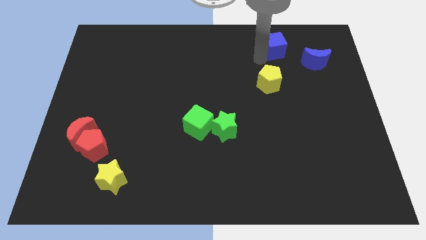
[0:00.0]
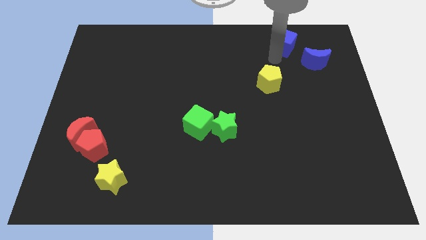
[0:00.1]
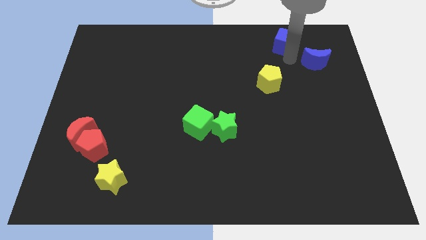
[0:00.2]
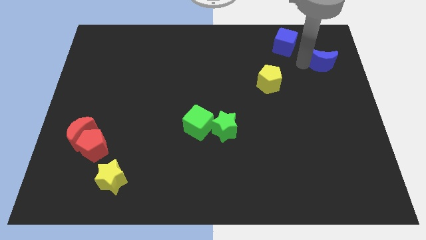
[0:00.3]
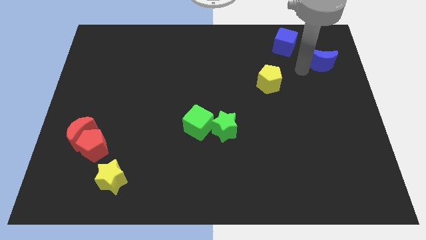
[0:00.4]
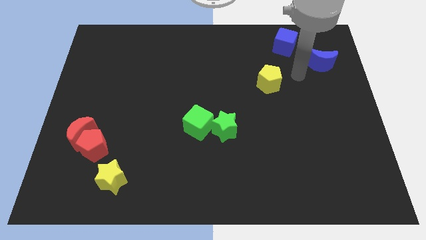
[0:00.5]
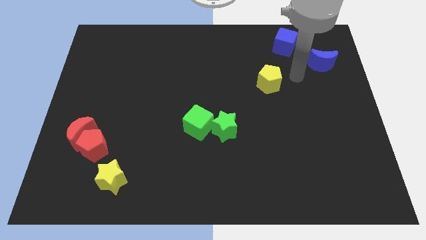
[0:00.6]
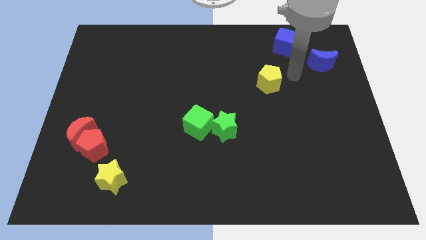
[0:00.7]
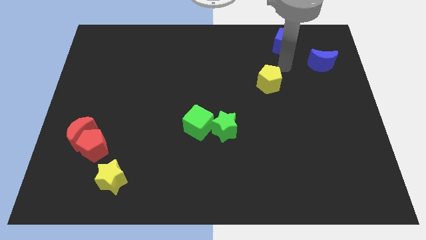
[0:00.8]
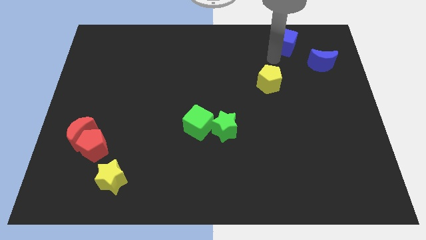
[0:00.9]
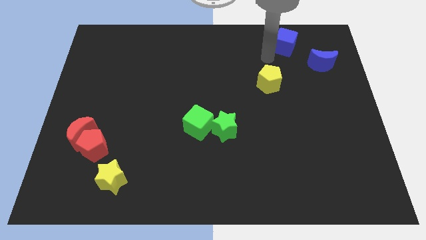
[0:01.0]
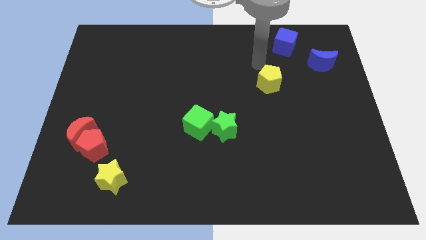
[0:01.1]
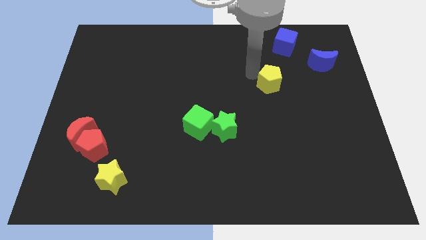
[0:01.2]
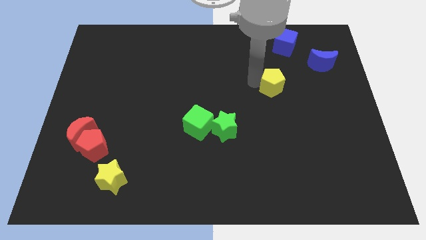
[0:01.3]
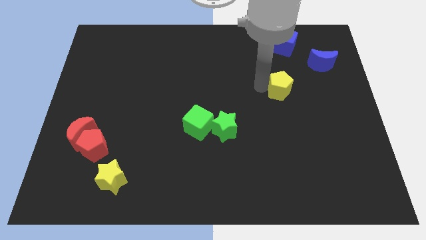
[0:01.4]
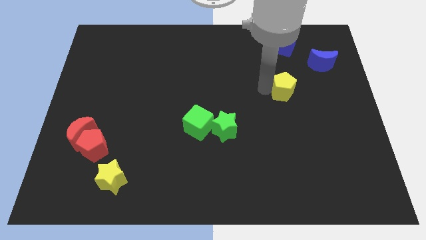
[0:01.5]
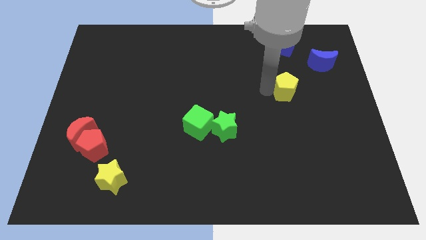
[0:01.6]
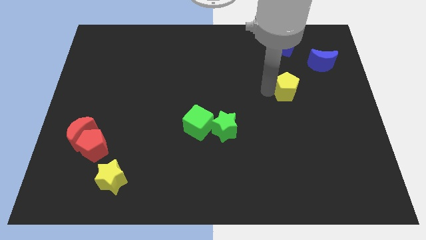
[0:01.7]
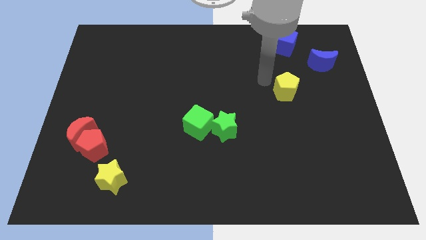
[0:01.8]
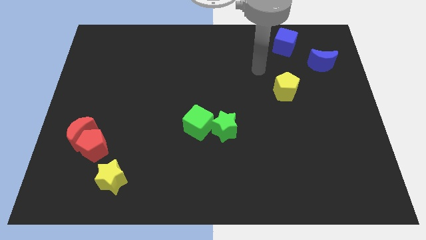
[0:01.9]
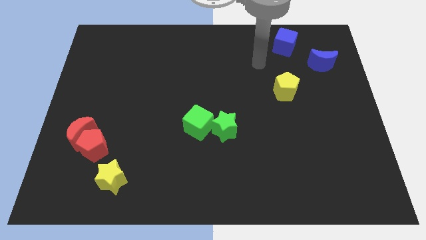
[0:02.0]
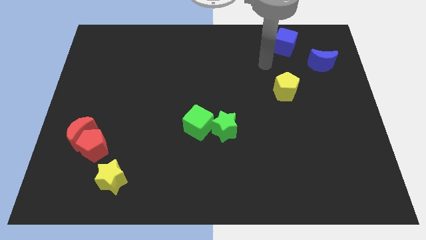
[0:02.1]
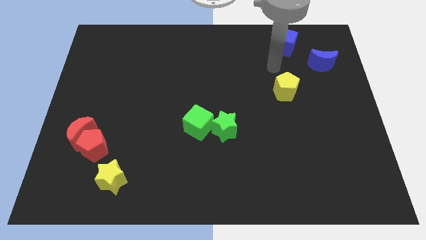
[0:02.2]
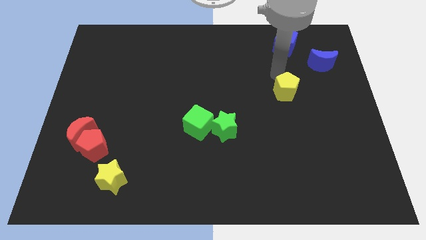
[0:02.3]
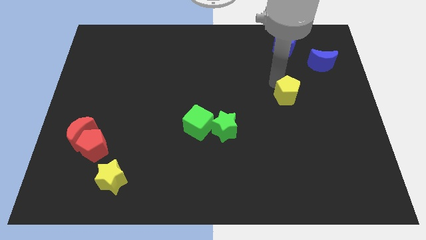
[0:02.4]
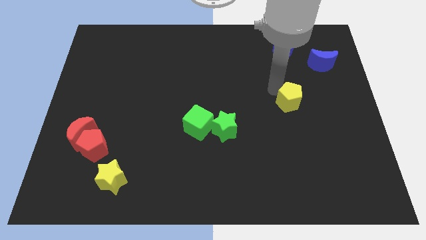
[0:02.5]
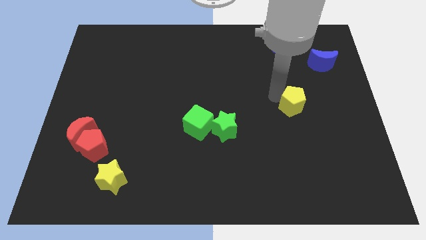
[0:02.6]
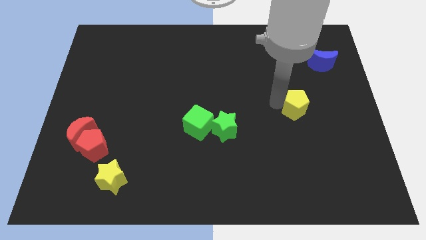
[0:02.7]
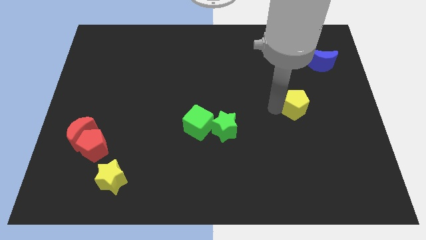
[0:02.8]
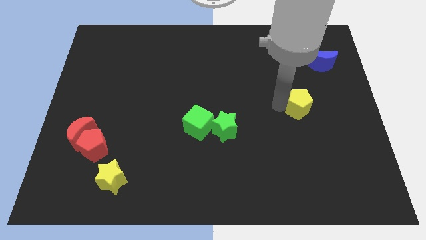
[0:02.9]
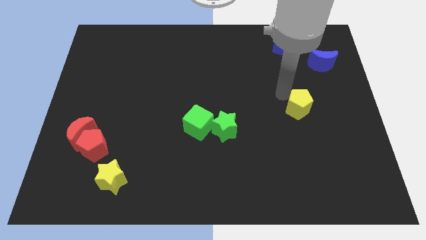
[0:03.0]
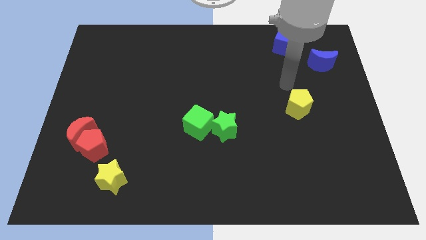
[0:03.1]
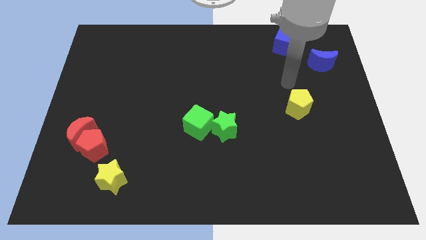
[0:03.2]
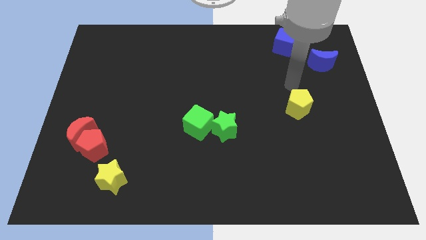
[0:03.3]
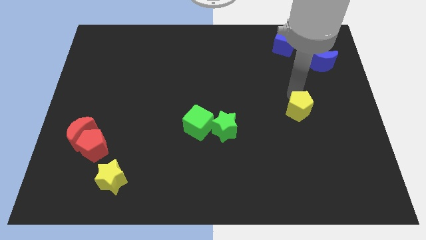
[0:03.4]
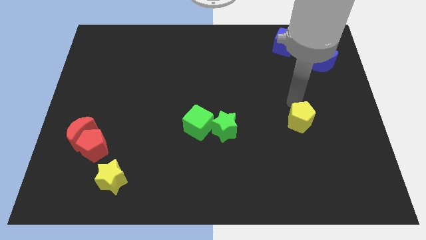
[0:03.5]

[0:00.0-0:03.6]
push yellow pentagon slightly towards down

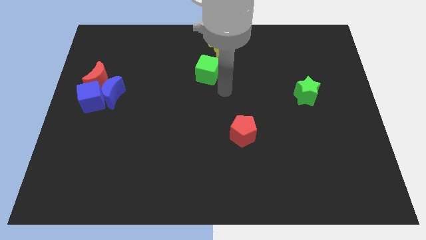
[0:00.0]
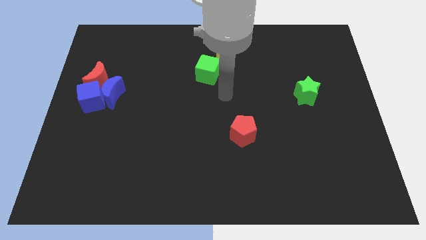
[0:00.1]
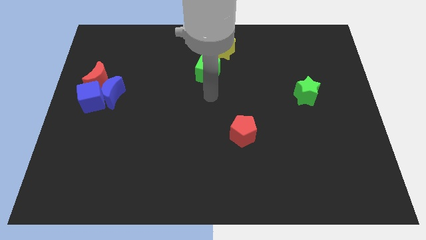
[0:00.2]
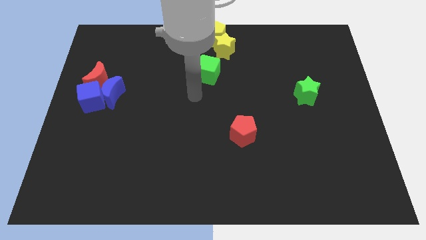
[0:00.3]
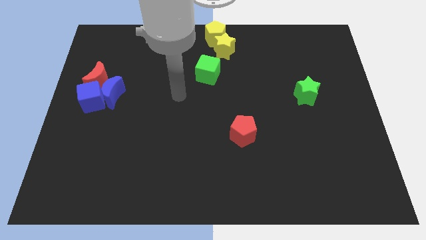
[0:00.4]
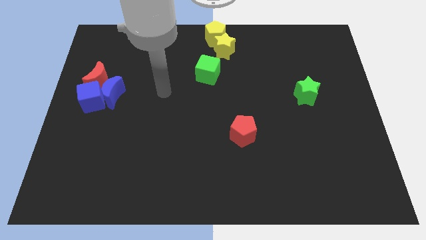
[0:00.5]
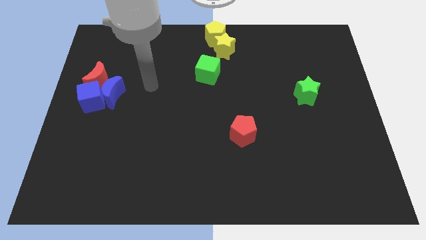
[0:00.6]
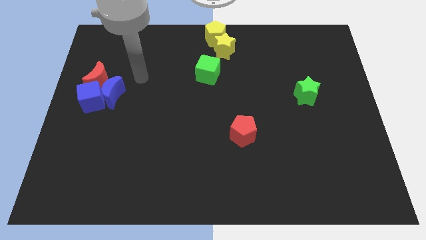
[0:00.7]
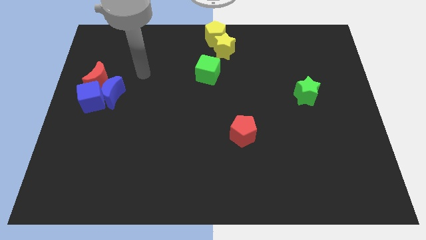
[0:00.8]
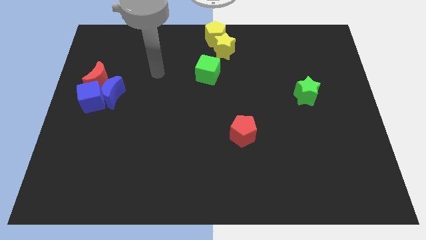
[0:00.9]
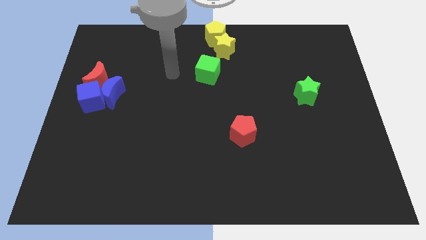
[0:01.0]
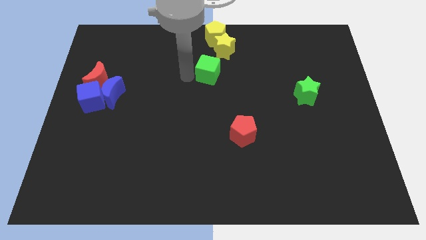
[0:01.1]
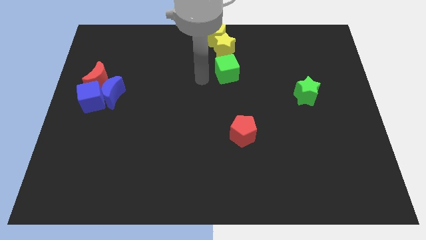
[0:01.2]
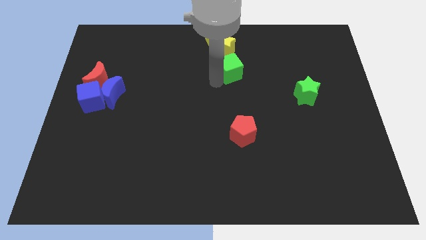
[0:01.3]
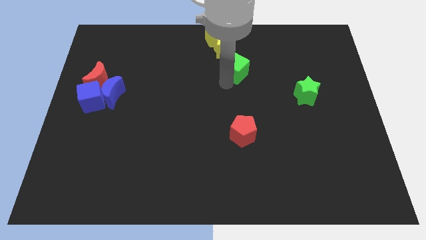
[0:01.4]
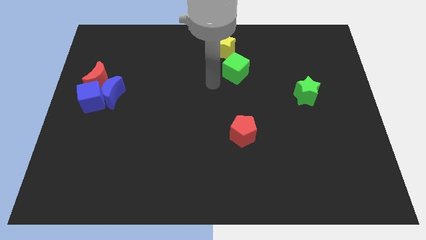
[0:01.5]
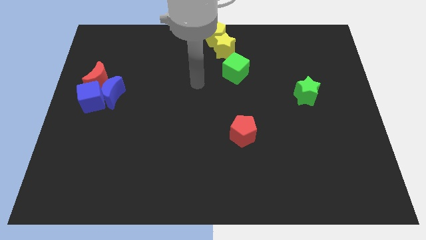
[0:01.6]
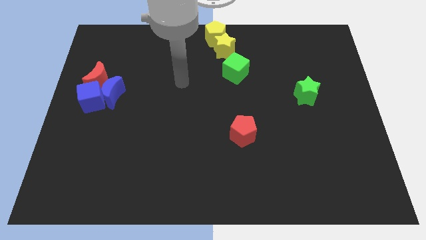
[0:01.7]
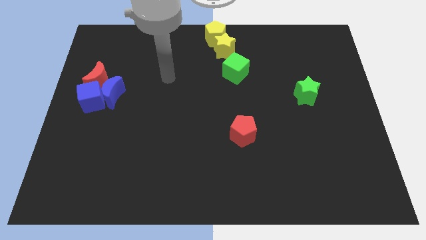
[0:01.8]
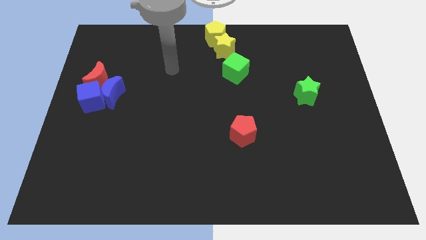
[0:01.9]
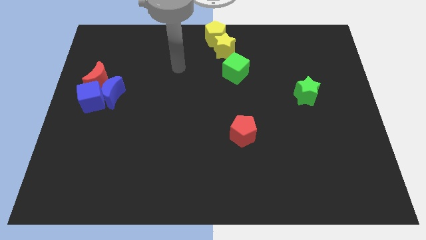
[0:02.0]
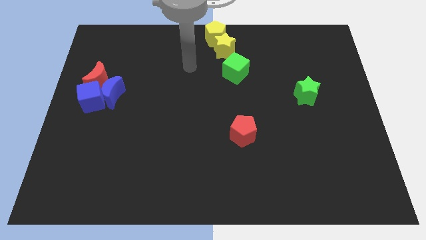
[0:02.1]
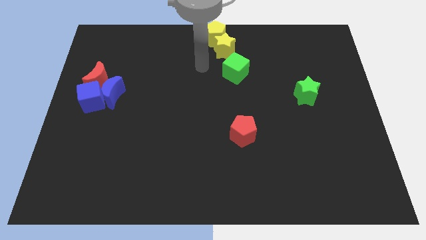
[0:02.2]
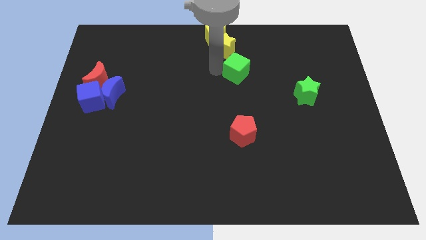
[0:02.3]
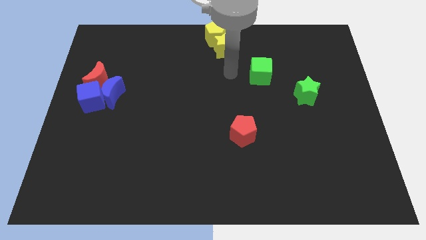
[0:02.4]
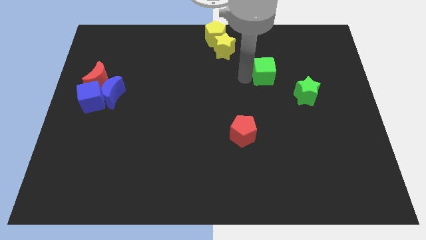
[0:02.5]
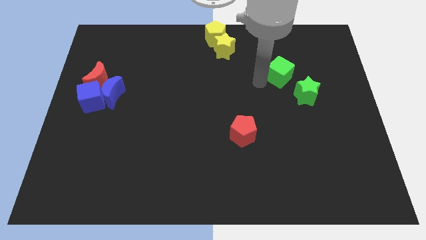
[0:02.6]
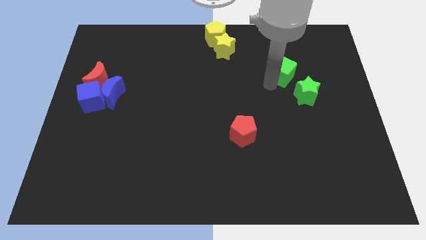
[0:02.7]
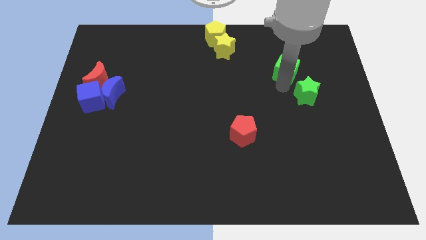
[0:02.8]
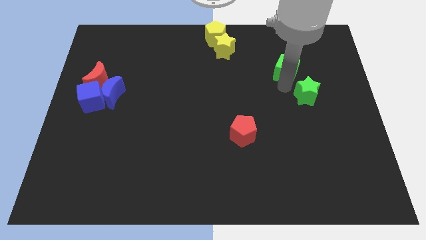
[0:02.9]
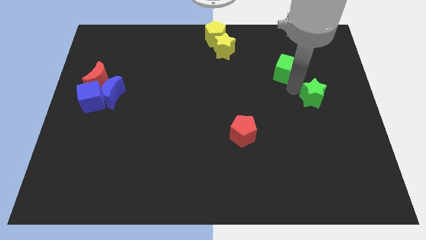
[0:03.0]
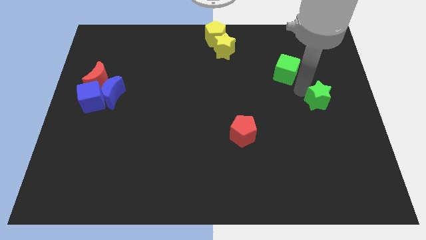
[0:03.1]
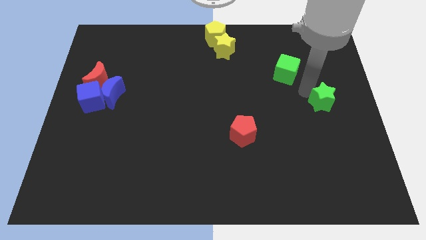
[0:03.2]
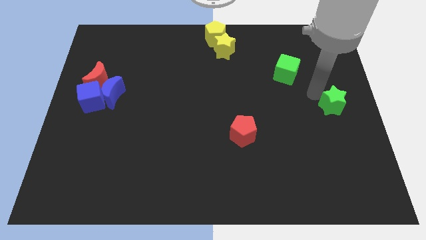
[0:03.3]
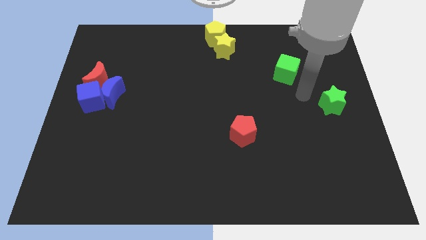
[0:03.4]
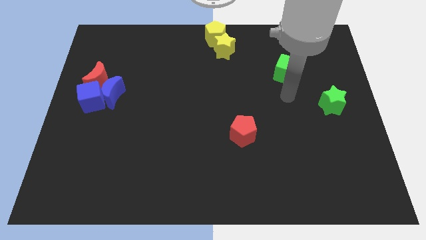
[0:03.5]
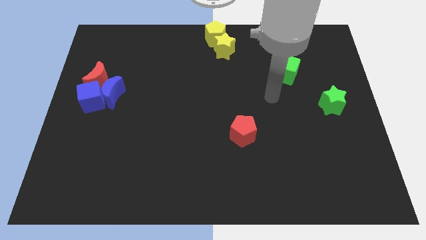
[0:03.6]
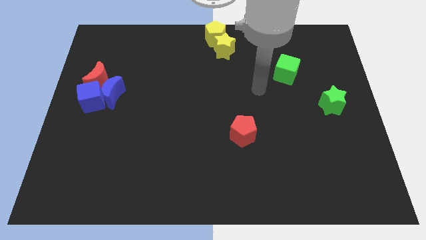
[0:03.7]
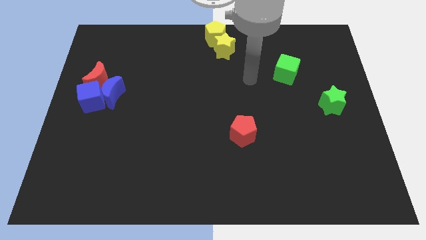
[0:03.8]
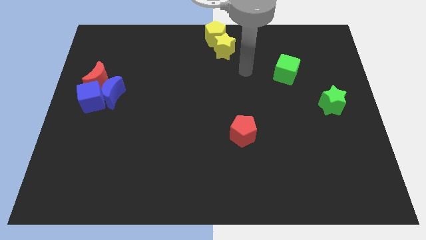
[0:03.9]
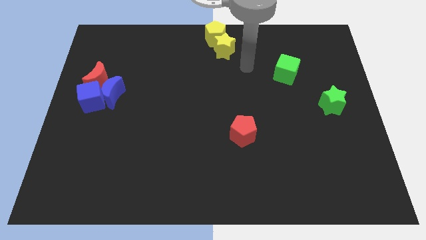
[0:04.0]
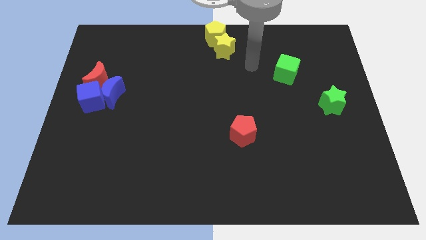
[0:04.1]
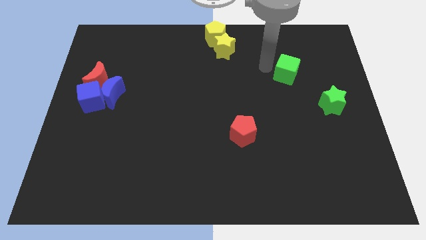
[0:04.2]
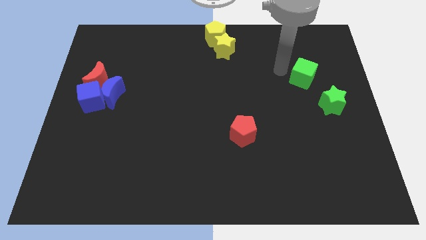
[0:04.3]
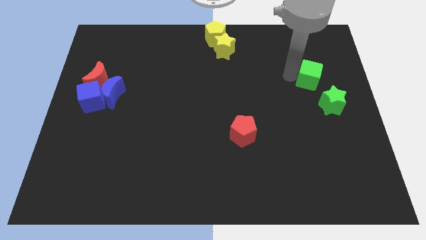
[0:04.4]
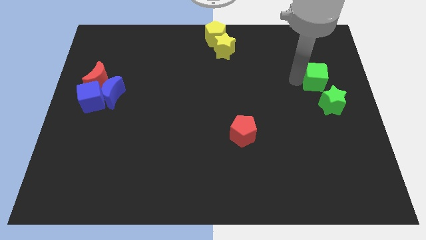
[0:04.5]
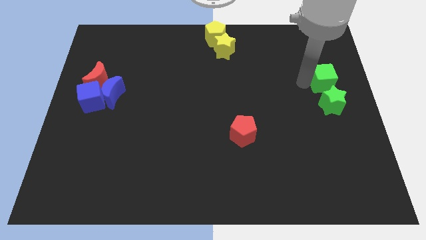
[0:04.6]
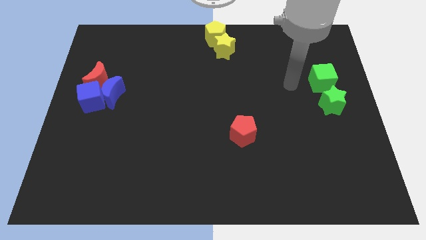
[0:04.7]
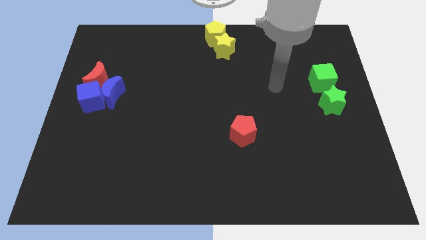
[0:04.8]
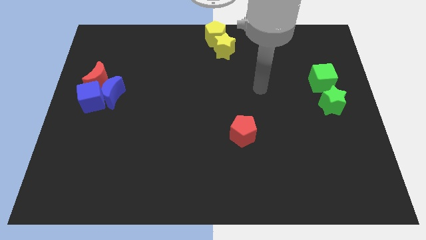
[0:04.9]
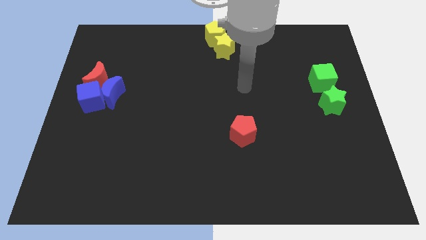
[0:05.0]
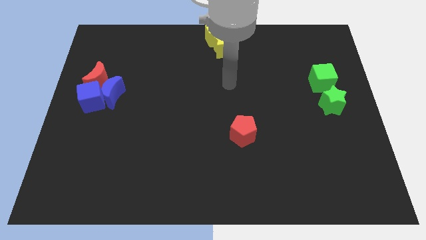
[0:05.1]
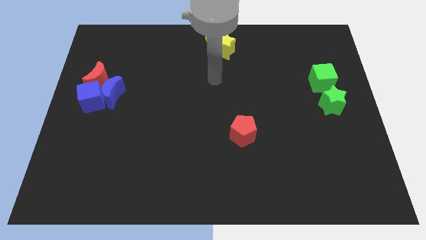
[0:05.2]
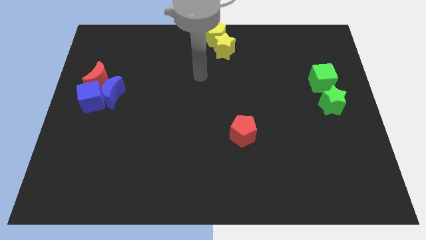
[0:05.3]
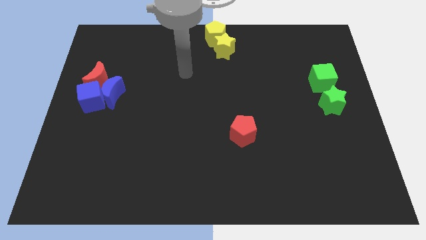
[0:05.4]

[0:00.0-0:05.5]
place the green blocks together to the right side of the board
